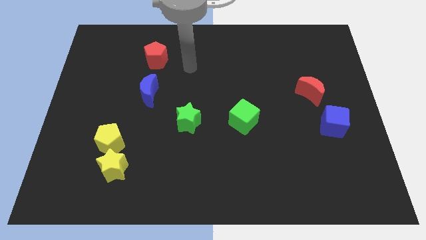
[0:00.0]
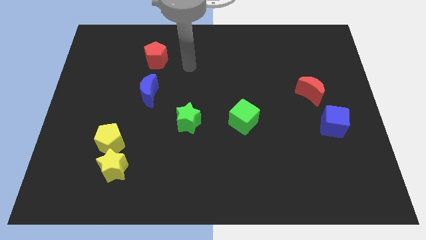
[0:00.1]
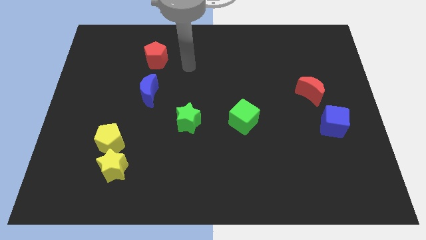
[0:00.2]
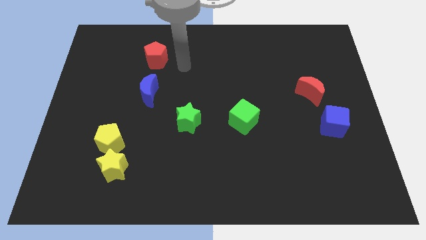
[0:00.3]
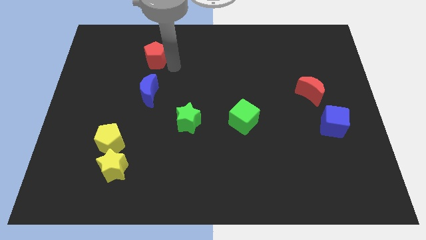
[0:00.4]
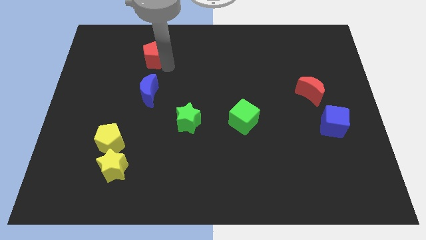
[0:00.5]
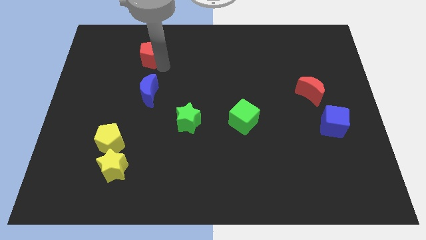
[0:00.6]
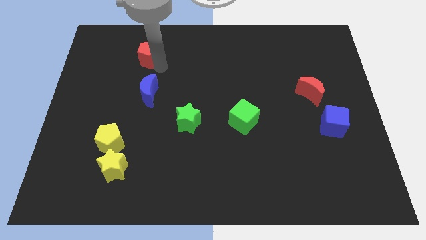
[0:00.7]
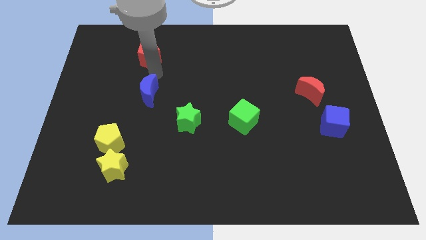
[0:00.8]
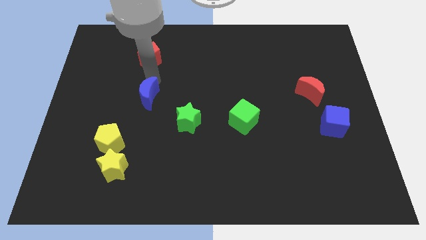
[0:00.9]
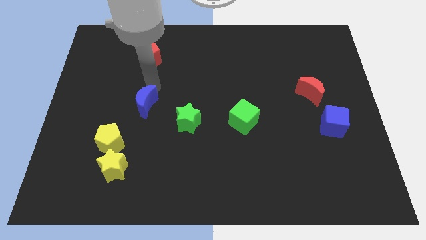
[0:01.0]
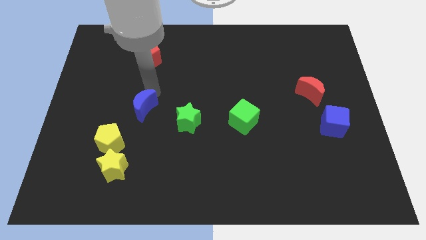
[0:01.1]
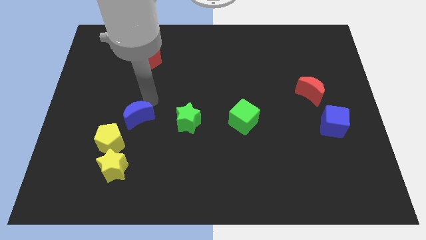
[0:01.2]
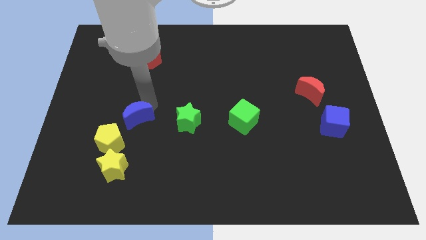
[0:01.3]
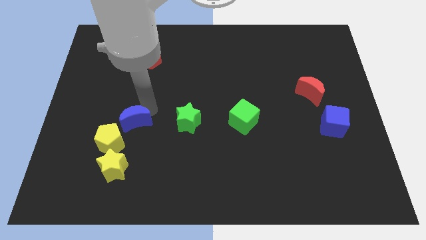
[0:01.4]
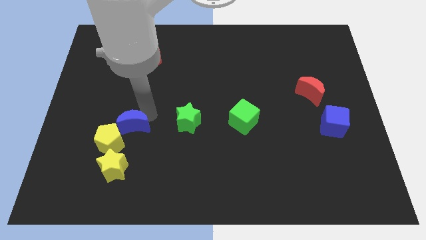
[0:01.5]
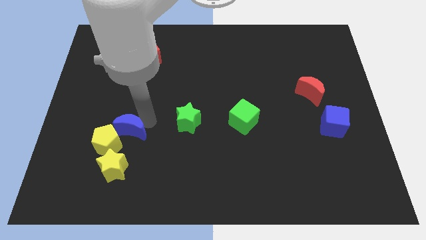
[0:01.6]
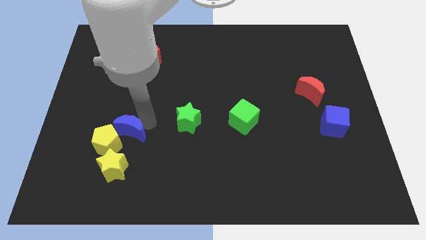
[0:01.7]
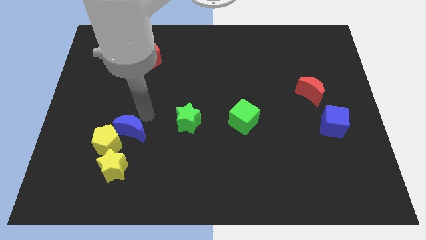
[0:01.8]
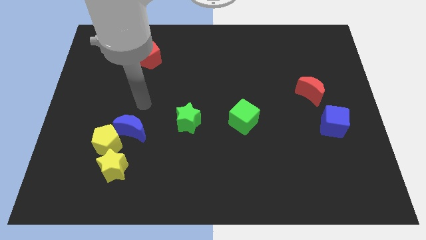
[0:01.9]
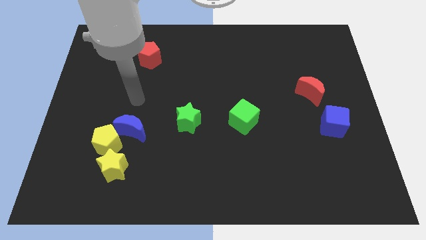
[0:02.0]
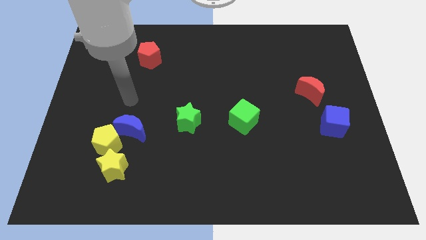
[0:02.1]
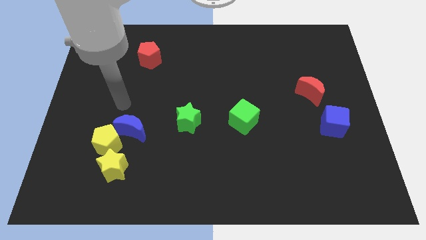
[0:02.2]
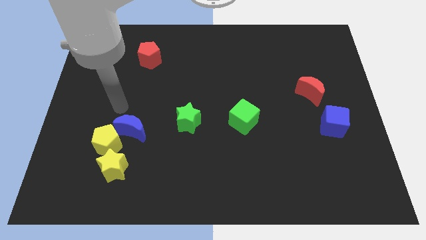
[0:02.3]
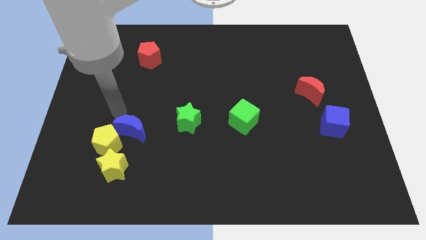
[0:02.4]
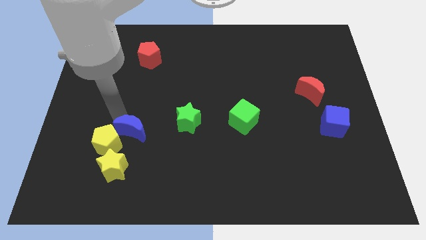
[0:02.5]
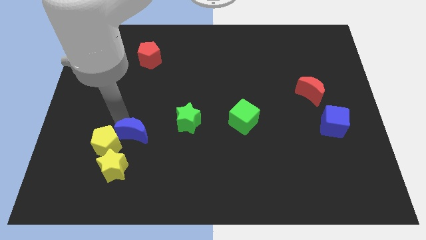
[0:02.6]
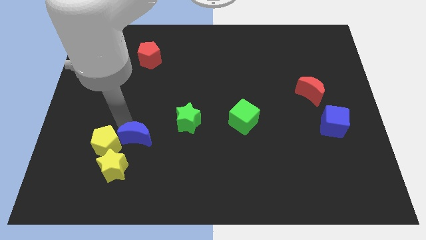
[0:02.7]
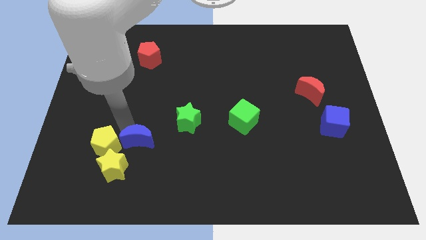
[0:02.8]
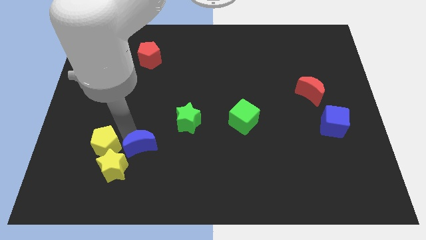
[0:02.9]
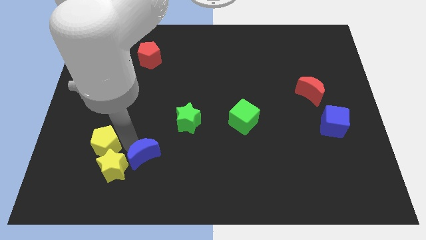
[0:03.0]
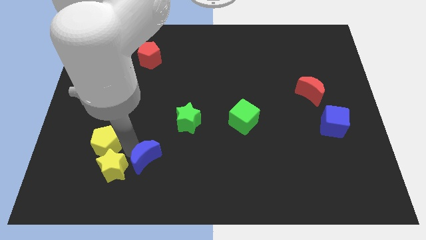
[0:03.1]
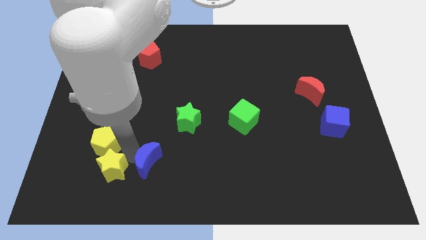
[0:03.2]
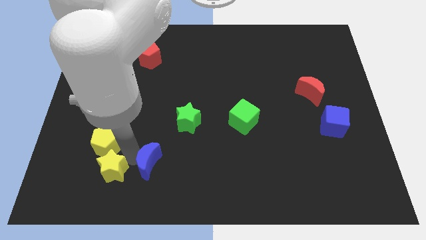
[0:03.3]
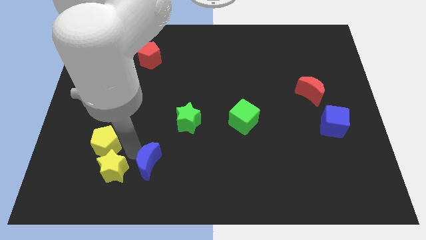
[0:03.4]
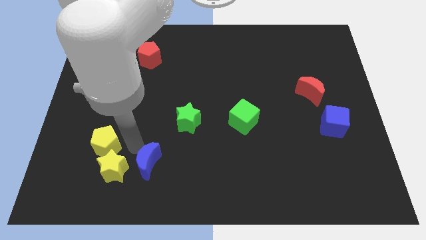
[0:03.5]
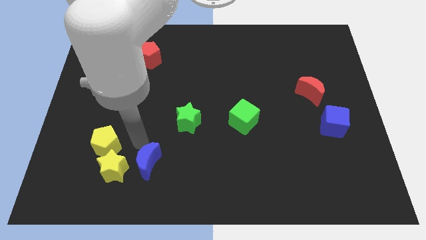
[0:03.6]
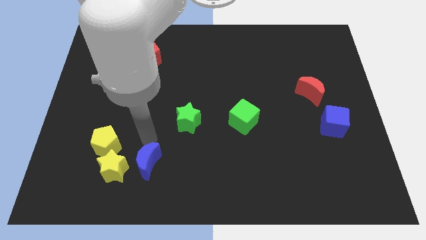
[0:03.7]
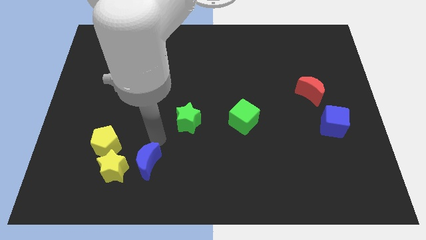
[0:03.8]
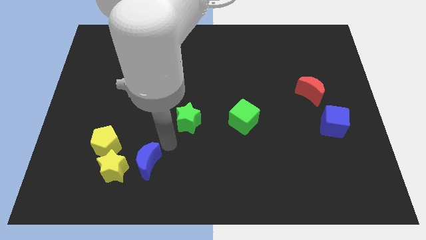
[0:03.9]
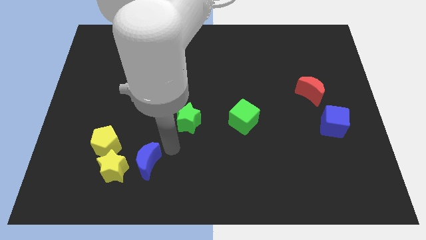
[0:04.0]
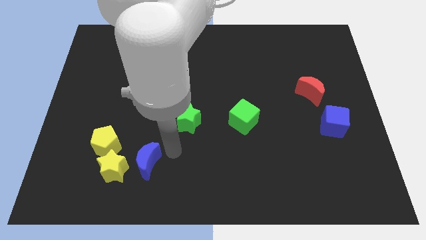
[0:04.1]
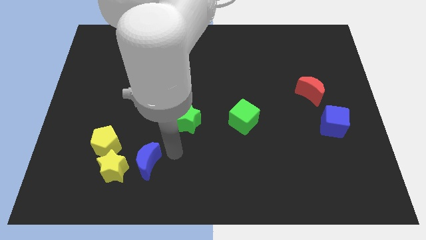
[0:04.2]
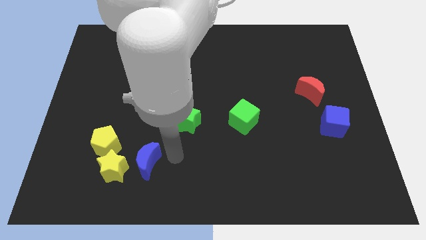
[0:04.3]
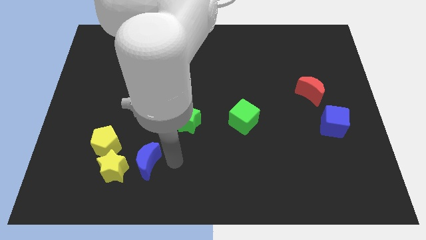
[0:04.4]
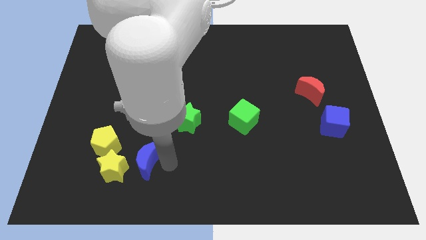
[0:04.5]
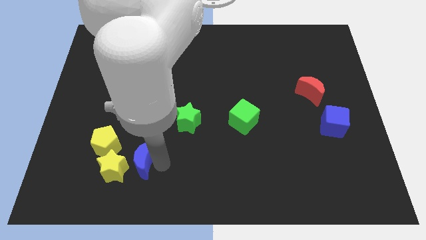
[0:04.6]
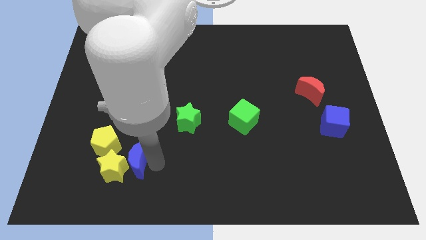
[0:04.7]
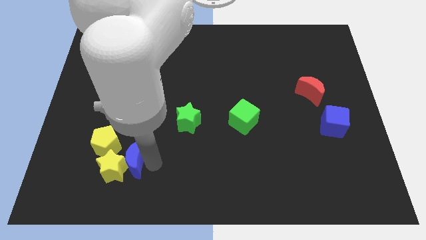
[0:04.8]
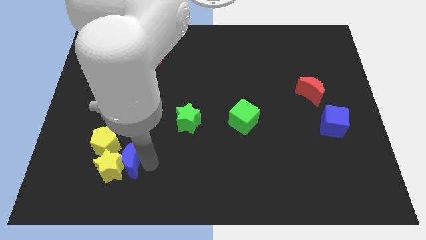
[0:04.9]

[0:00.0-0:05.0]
slide the blue moon to the yellow star

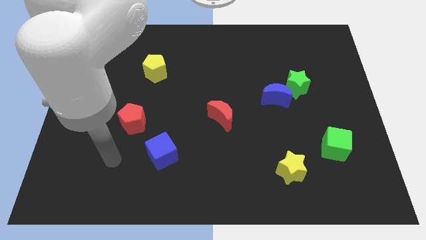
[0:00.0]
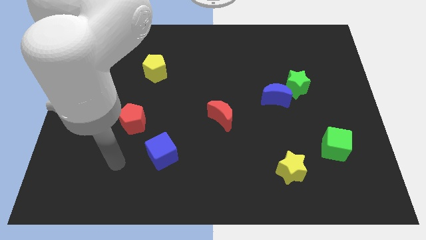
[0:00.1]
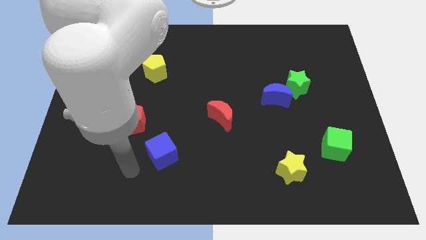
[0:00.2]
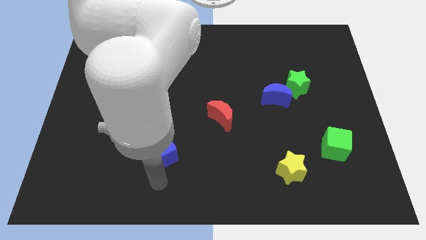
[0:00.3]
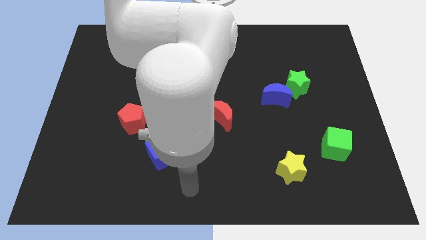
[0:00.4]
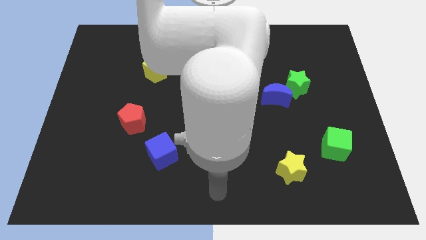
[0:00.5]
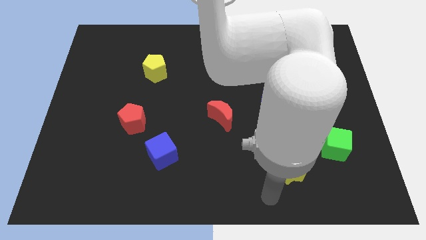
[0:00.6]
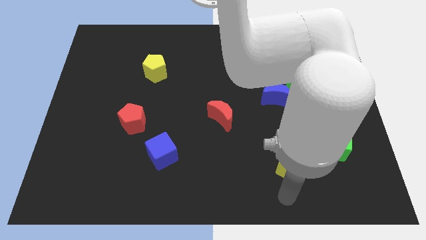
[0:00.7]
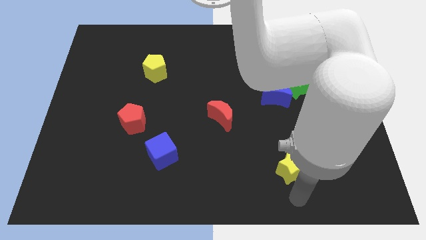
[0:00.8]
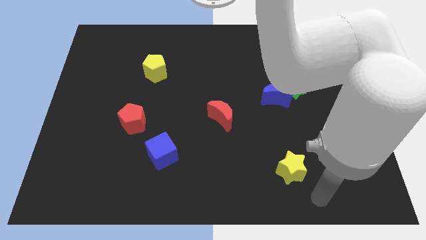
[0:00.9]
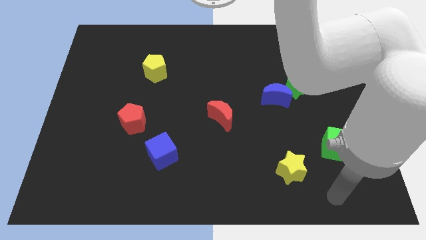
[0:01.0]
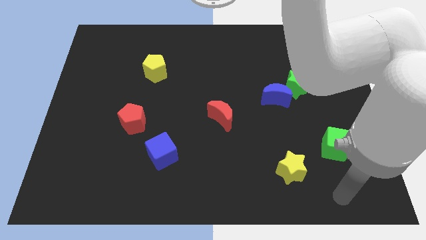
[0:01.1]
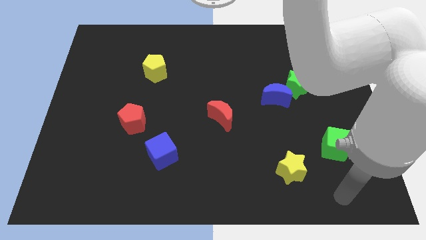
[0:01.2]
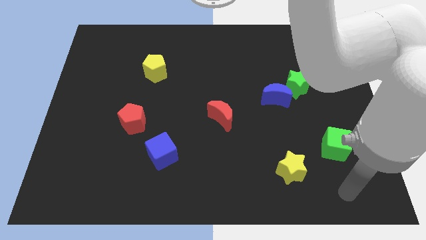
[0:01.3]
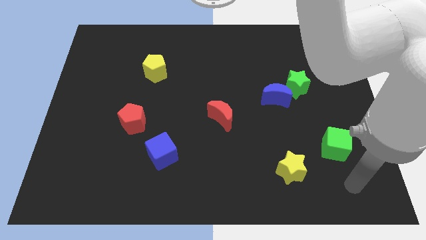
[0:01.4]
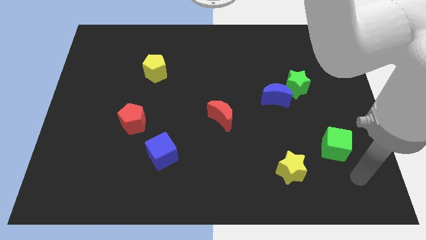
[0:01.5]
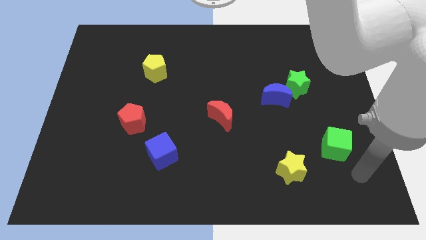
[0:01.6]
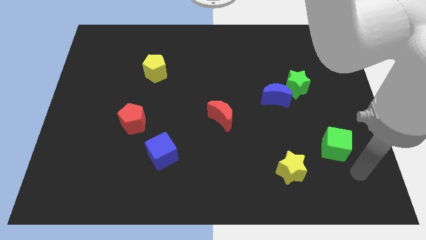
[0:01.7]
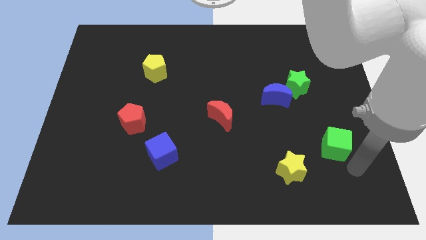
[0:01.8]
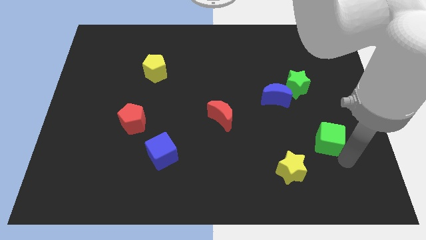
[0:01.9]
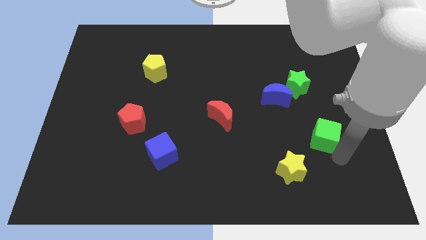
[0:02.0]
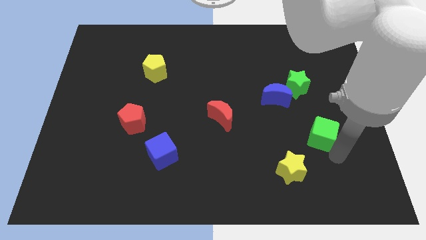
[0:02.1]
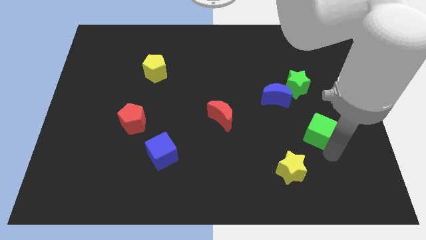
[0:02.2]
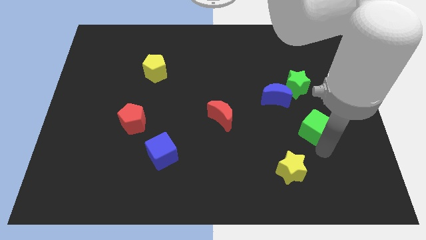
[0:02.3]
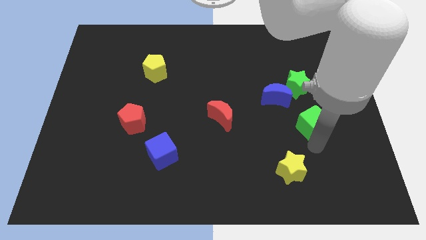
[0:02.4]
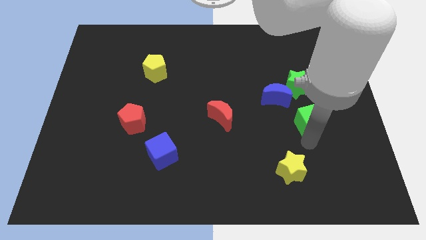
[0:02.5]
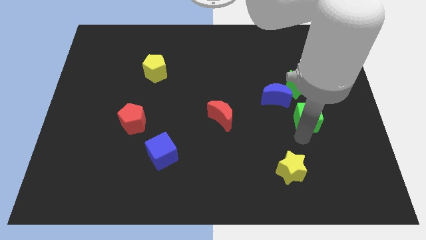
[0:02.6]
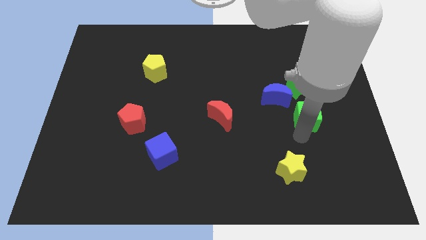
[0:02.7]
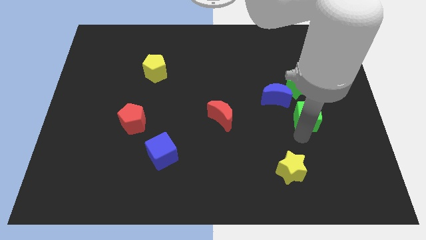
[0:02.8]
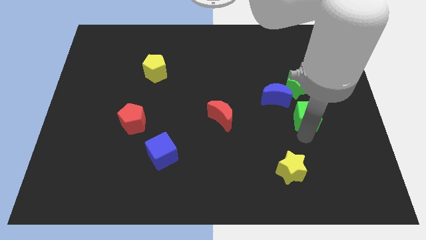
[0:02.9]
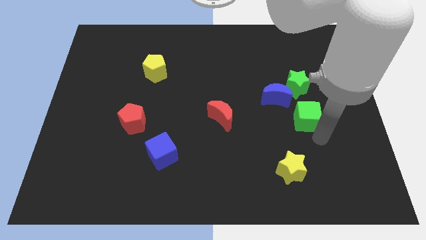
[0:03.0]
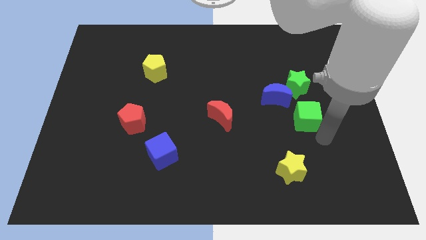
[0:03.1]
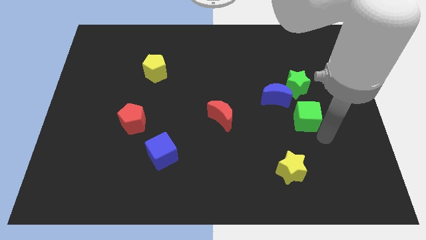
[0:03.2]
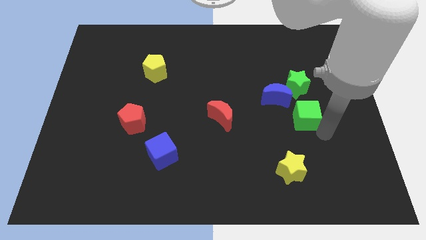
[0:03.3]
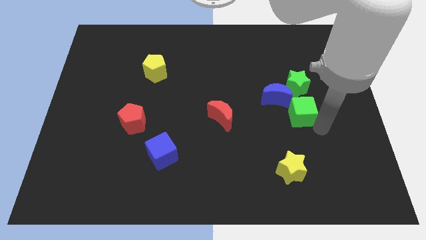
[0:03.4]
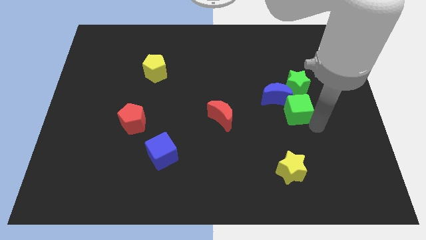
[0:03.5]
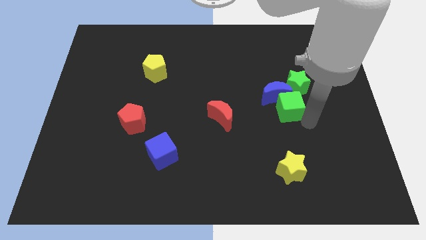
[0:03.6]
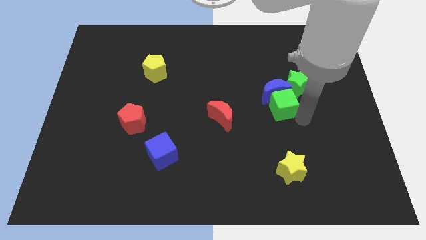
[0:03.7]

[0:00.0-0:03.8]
push the green cube next to the blue moon
